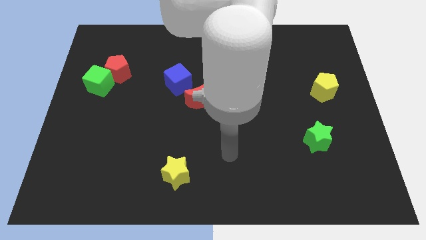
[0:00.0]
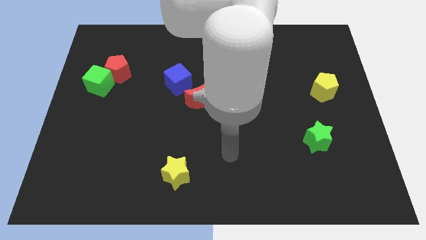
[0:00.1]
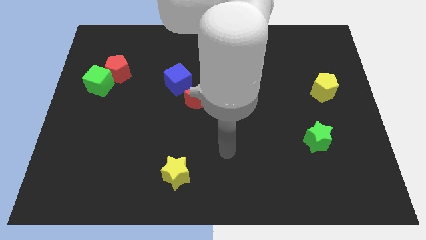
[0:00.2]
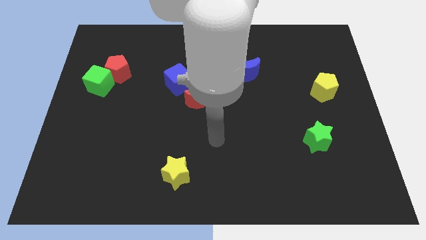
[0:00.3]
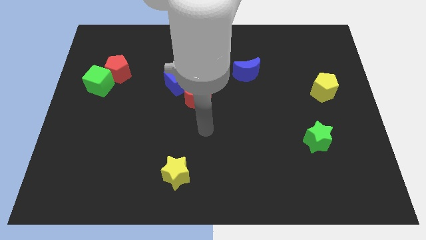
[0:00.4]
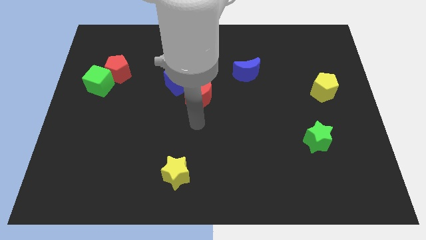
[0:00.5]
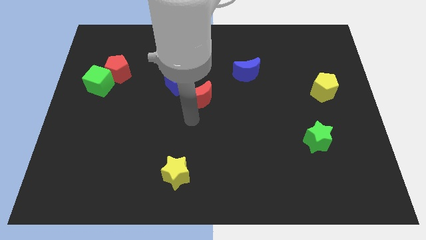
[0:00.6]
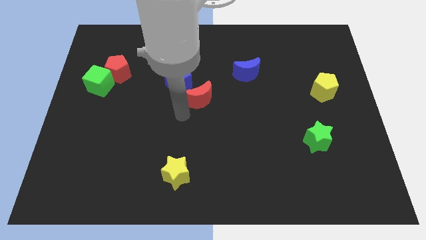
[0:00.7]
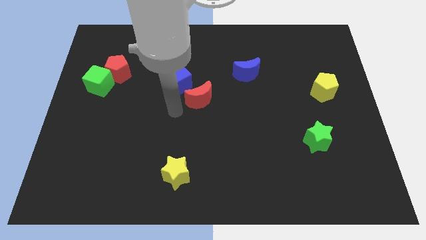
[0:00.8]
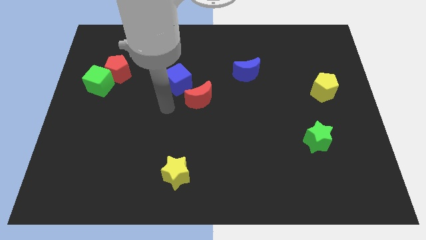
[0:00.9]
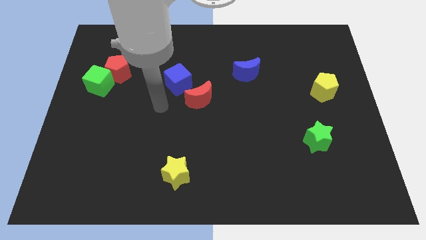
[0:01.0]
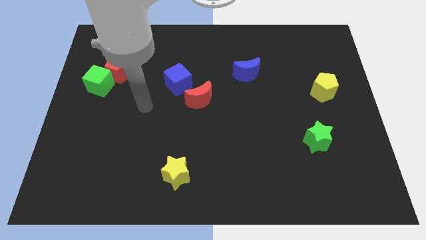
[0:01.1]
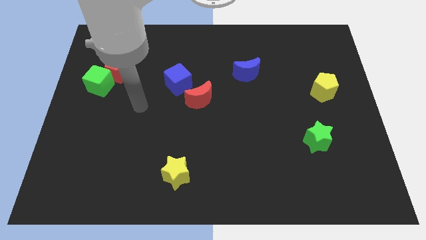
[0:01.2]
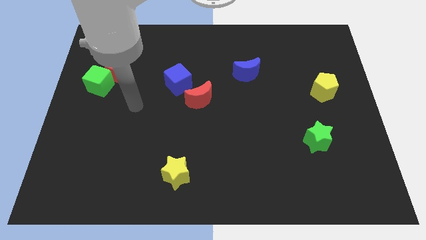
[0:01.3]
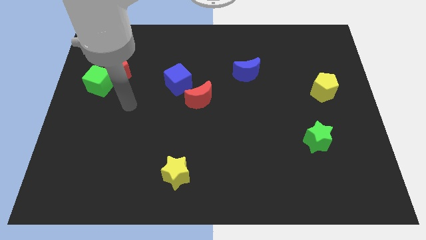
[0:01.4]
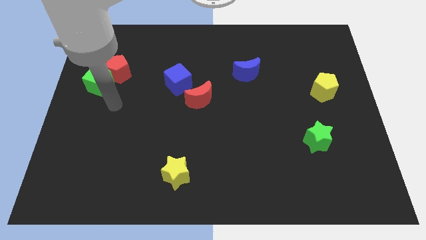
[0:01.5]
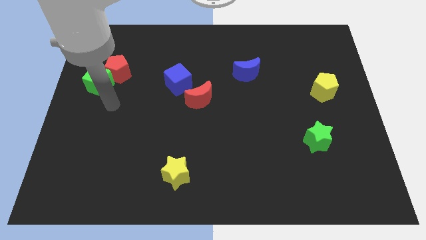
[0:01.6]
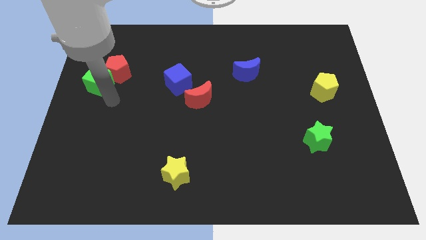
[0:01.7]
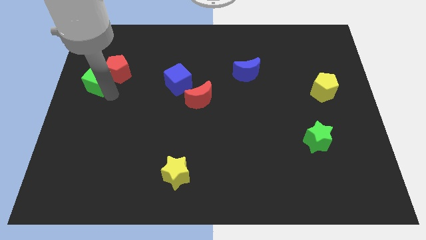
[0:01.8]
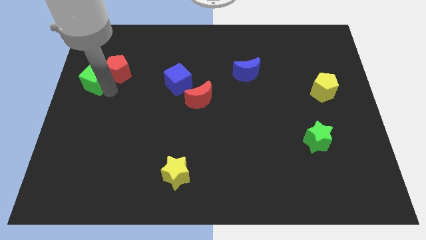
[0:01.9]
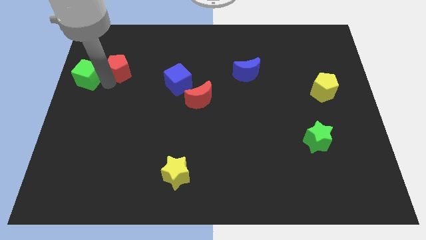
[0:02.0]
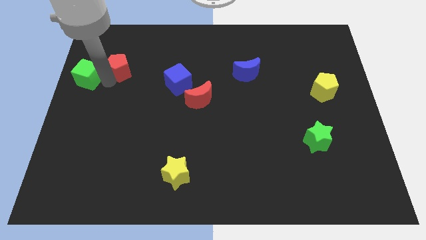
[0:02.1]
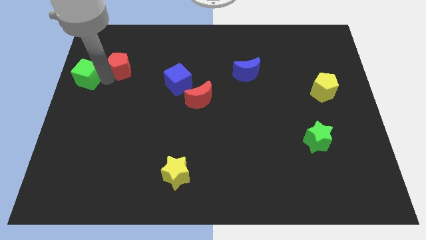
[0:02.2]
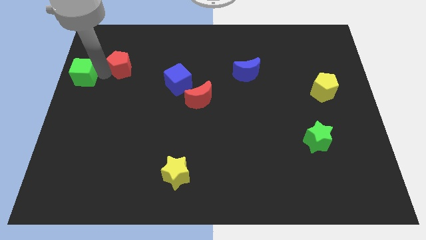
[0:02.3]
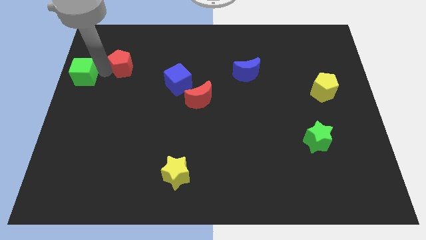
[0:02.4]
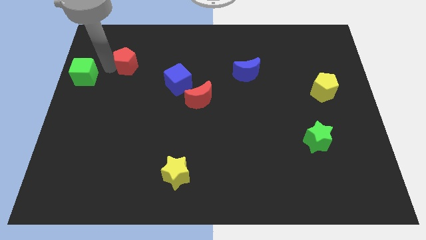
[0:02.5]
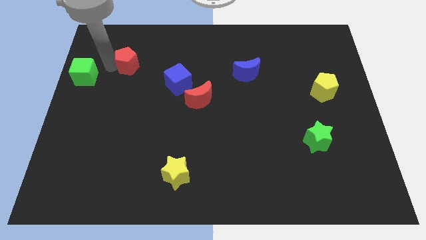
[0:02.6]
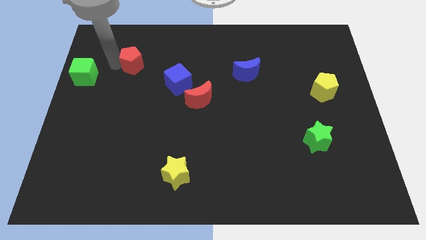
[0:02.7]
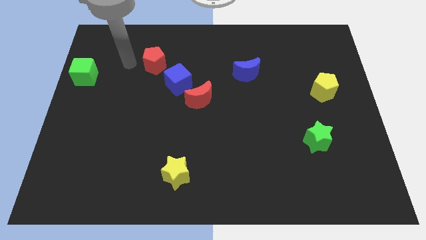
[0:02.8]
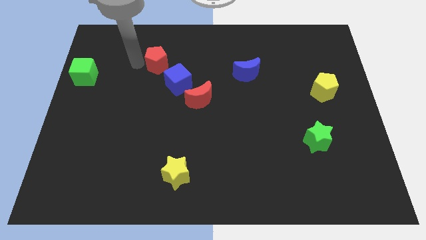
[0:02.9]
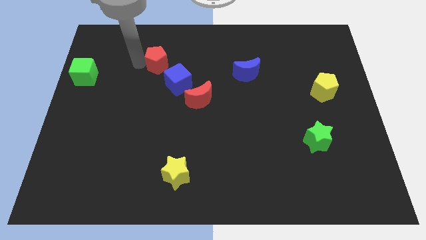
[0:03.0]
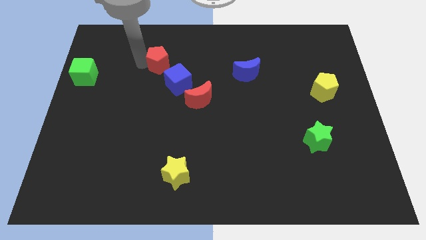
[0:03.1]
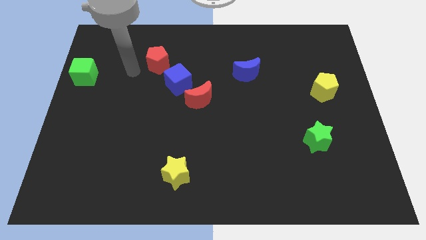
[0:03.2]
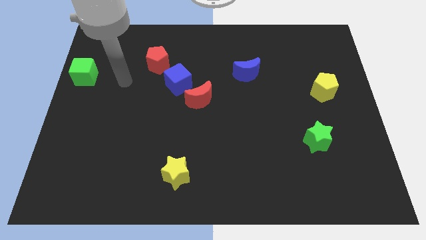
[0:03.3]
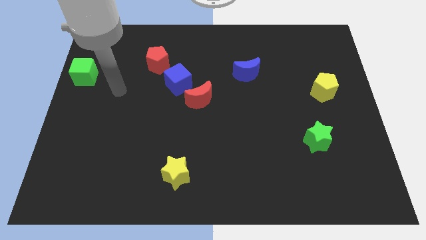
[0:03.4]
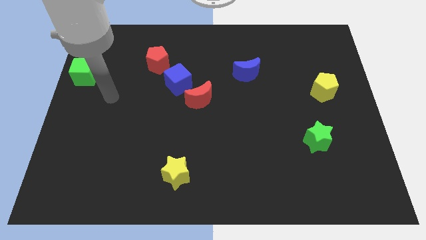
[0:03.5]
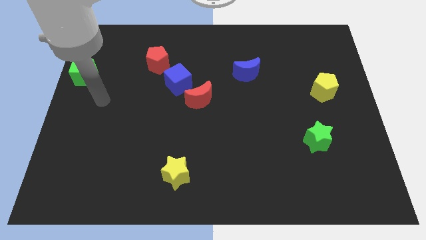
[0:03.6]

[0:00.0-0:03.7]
place red pentagon to the top left side of the blue cube

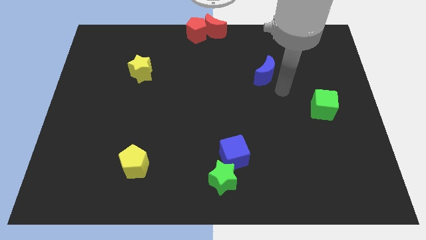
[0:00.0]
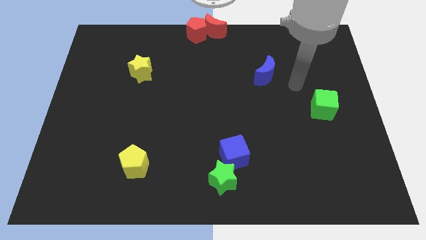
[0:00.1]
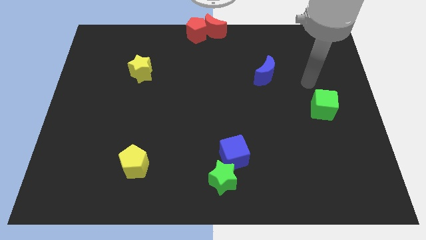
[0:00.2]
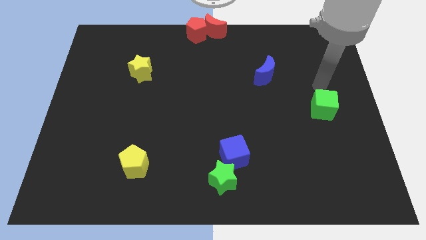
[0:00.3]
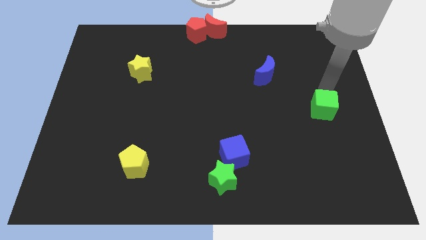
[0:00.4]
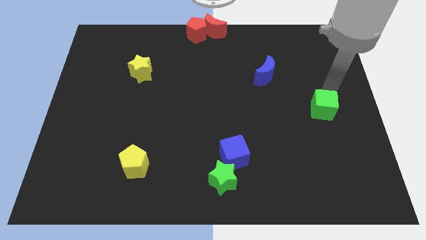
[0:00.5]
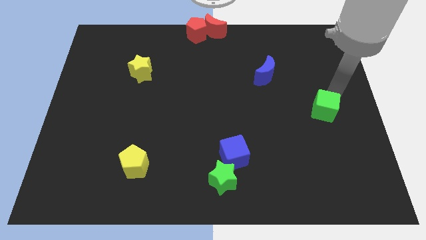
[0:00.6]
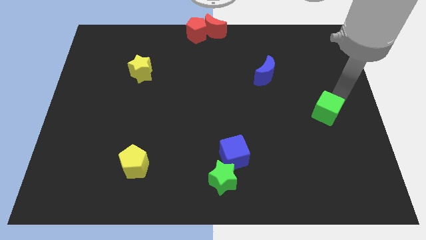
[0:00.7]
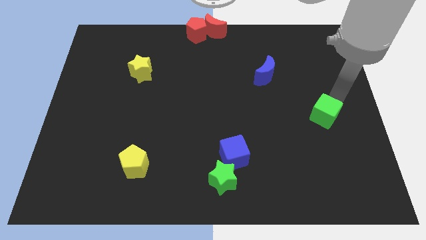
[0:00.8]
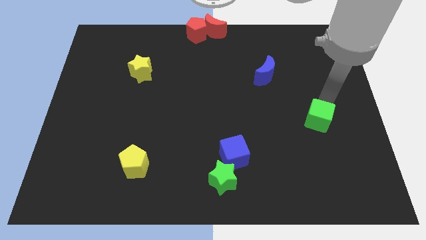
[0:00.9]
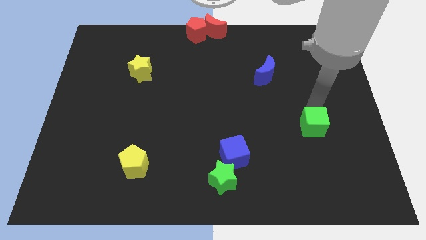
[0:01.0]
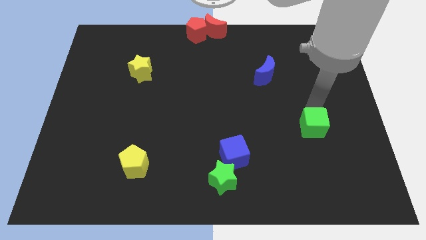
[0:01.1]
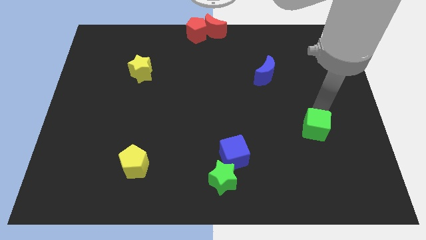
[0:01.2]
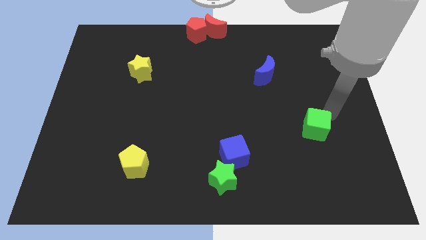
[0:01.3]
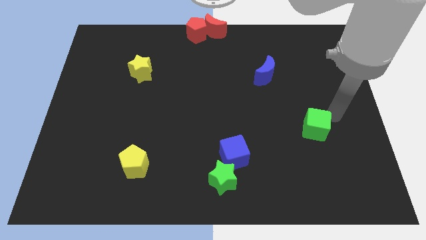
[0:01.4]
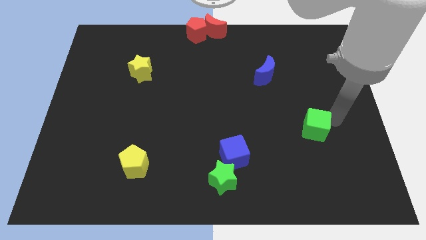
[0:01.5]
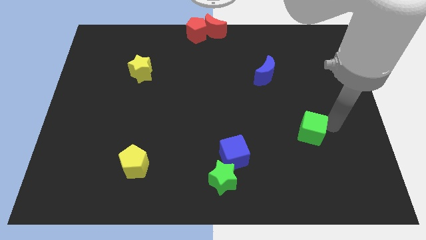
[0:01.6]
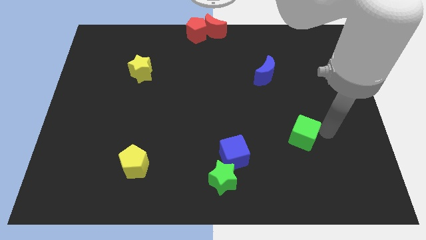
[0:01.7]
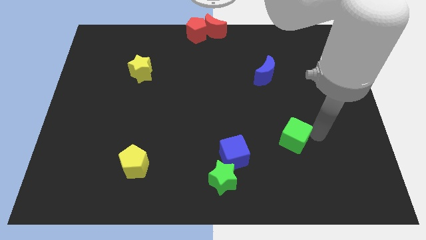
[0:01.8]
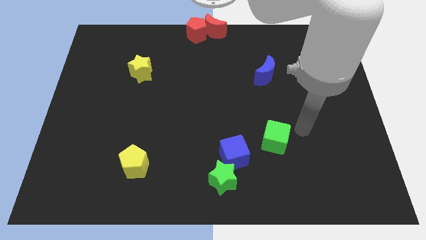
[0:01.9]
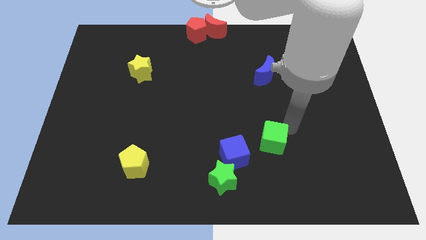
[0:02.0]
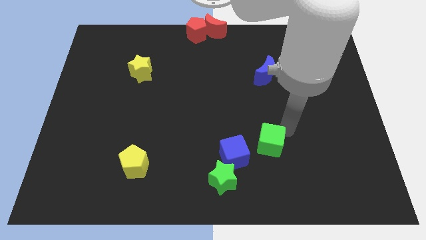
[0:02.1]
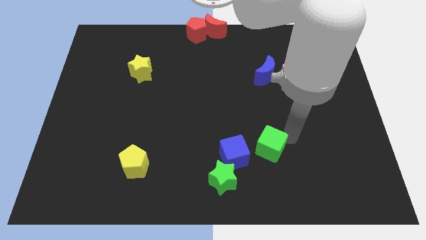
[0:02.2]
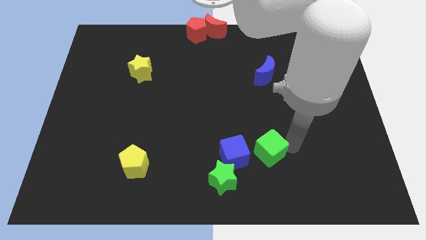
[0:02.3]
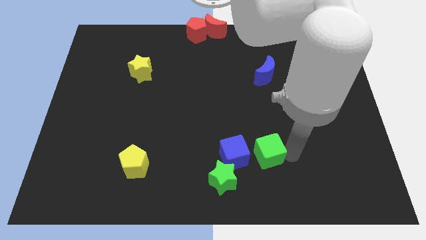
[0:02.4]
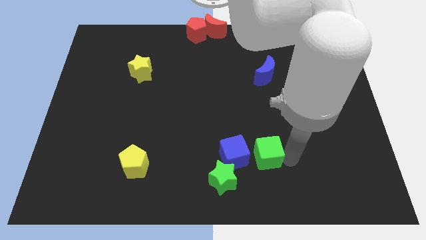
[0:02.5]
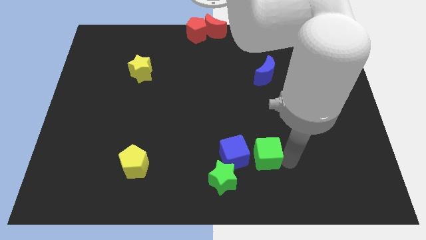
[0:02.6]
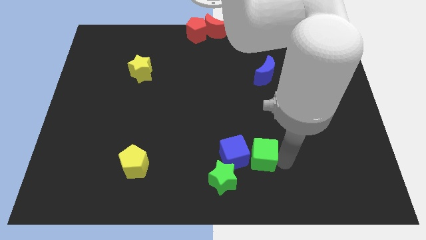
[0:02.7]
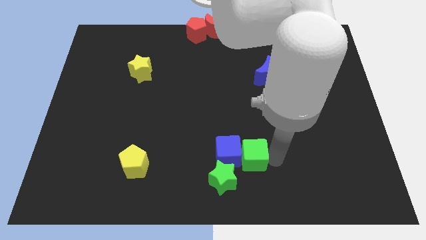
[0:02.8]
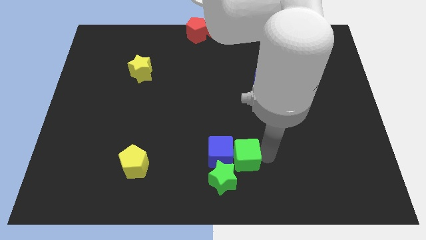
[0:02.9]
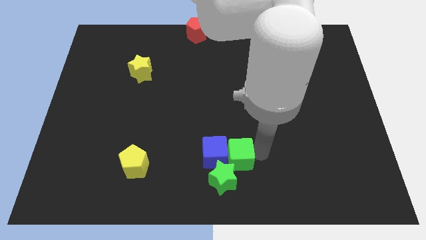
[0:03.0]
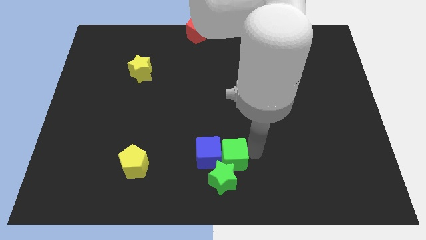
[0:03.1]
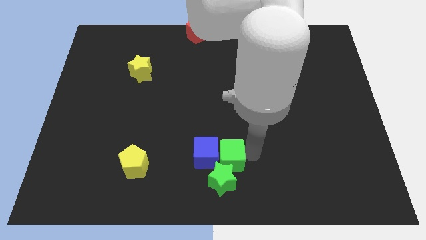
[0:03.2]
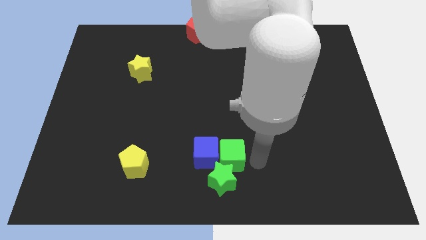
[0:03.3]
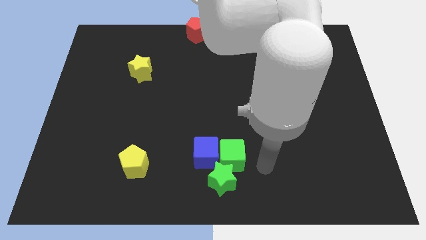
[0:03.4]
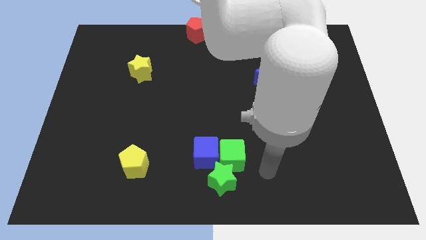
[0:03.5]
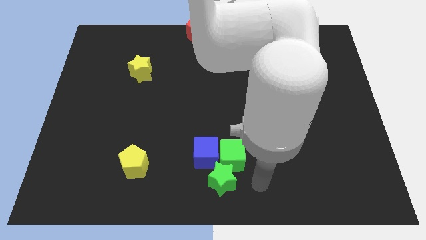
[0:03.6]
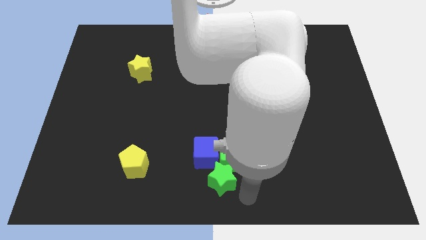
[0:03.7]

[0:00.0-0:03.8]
move the green cube above the green star

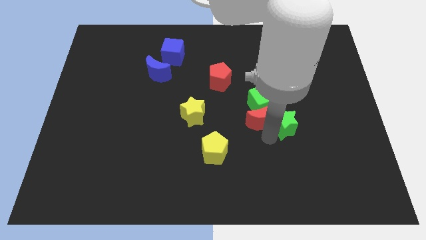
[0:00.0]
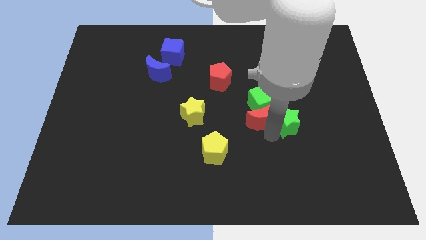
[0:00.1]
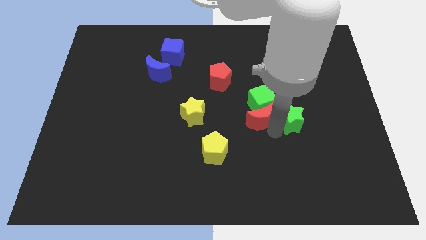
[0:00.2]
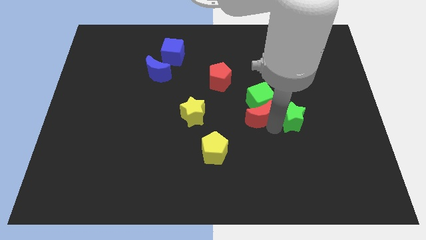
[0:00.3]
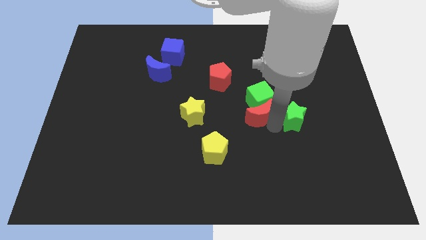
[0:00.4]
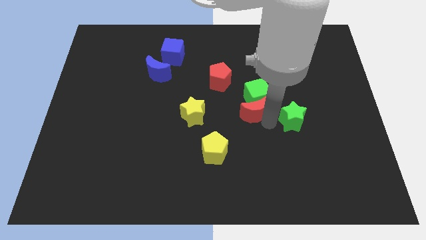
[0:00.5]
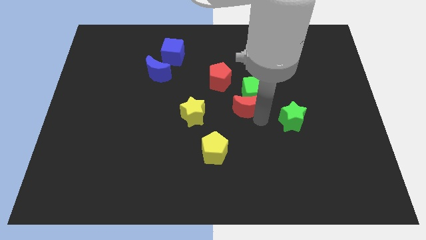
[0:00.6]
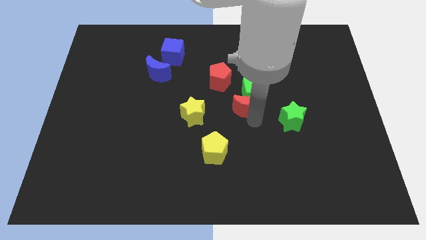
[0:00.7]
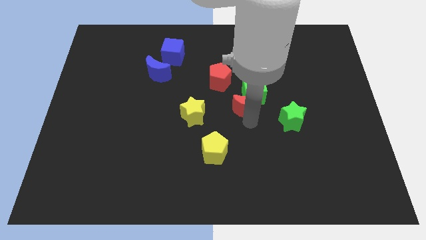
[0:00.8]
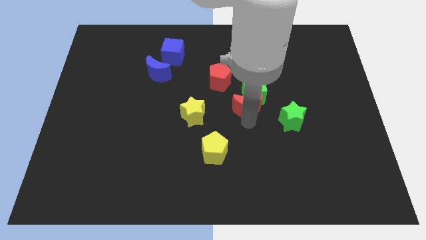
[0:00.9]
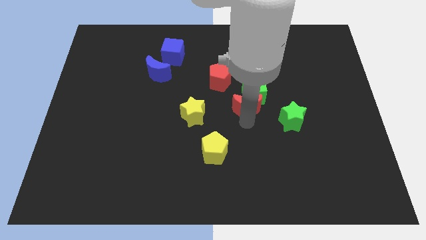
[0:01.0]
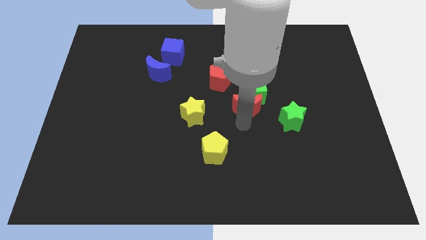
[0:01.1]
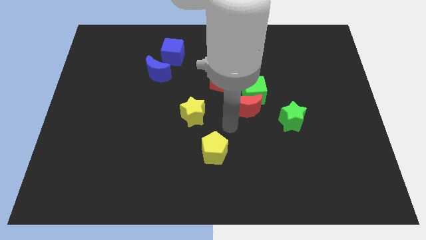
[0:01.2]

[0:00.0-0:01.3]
separate the green star from the group of blocks

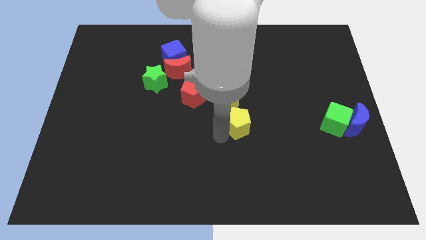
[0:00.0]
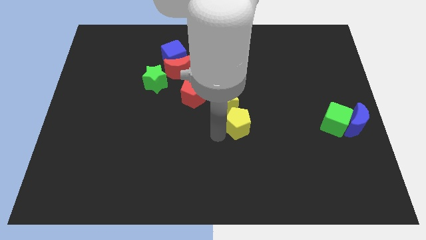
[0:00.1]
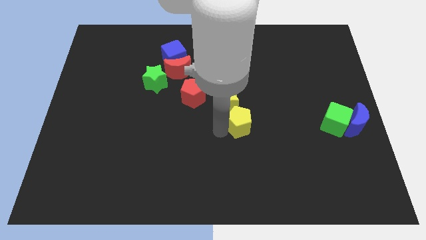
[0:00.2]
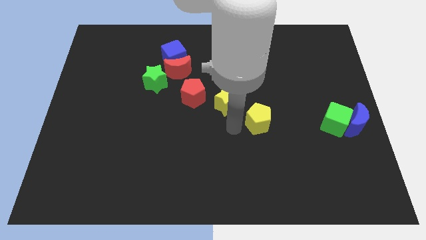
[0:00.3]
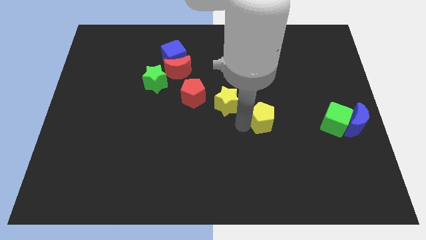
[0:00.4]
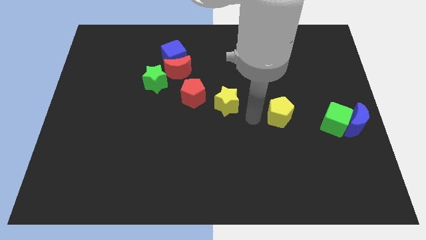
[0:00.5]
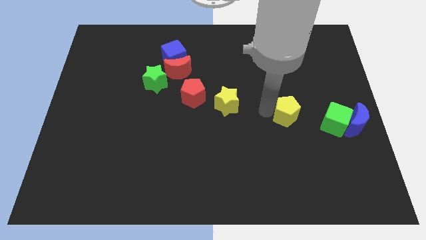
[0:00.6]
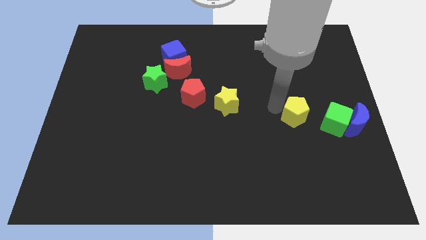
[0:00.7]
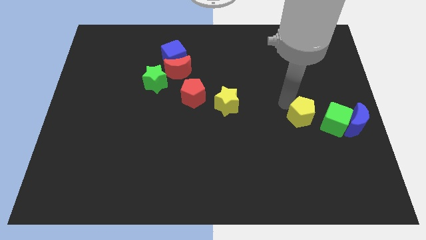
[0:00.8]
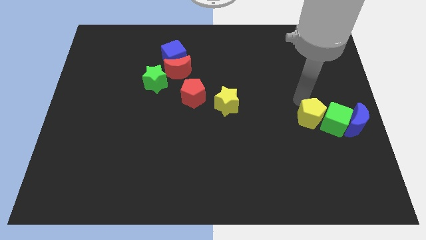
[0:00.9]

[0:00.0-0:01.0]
place the yellow pentagon left to the green cube
